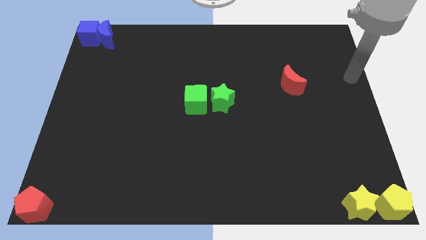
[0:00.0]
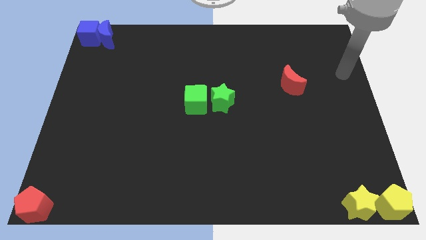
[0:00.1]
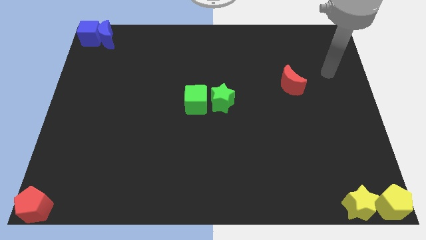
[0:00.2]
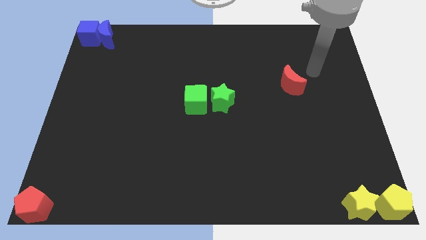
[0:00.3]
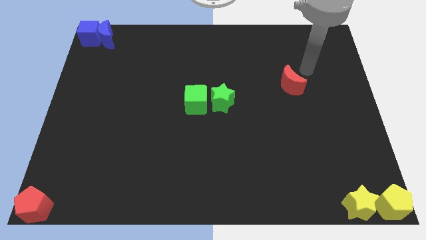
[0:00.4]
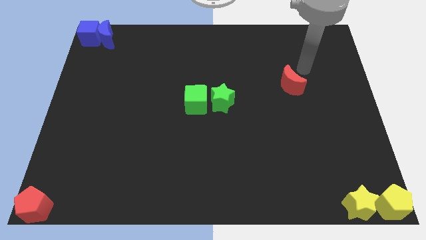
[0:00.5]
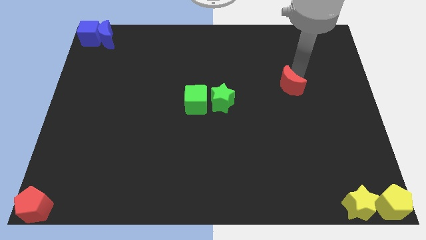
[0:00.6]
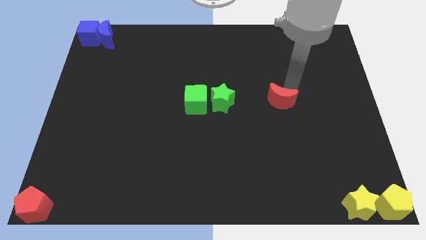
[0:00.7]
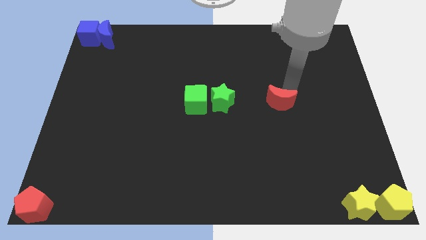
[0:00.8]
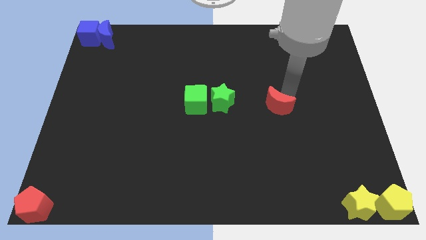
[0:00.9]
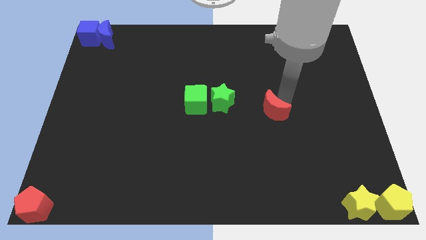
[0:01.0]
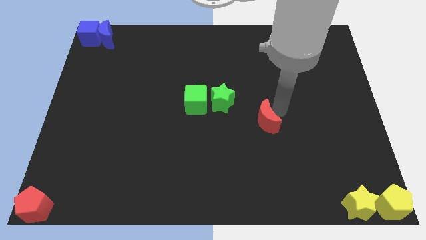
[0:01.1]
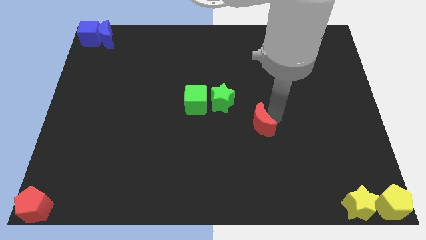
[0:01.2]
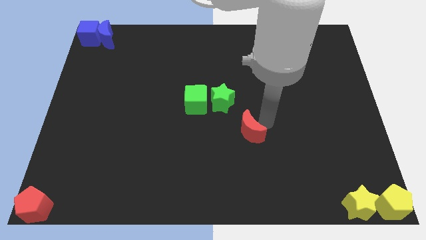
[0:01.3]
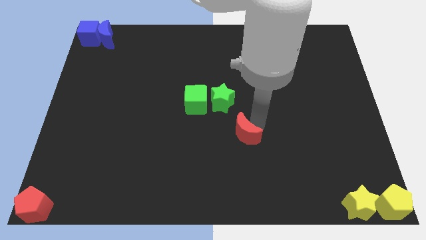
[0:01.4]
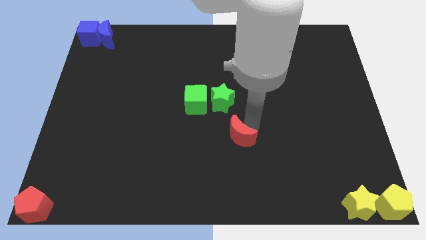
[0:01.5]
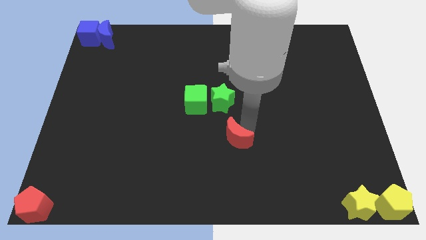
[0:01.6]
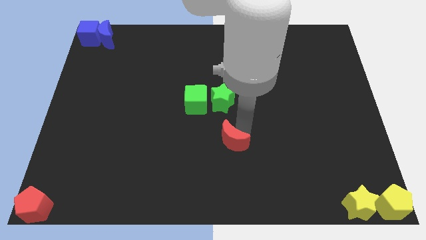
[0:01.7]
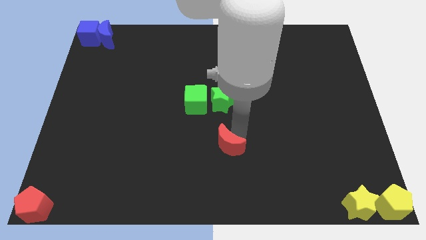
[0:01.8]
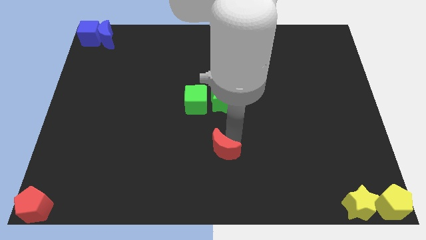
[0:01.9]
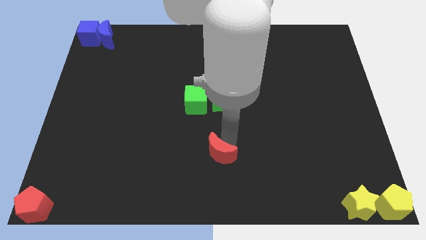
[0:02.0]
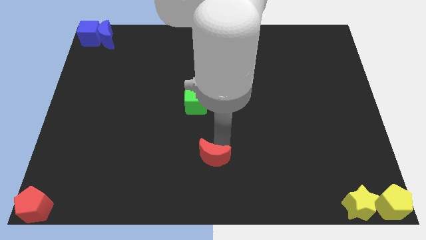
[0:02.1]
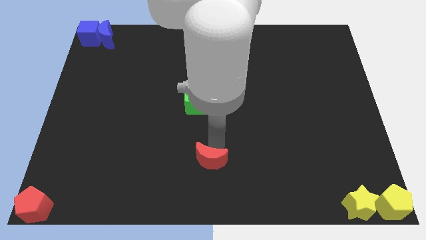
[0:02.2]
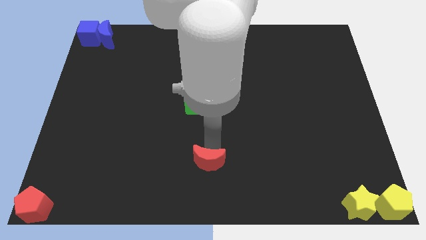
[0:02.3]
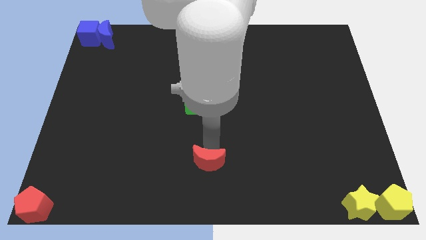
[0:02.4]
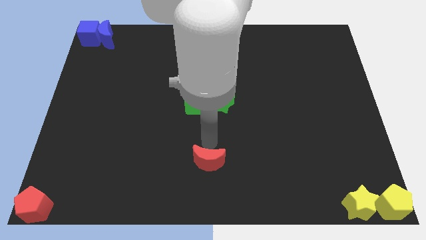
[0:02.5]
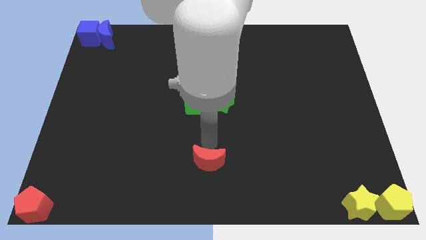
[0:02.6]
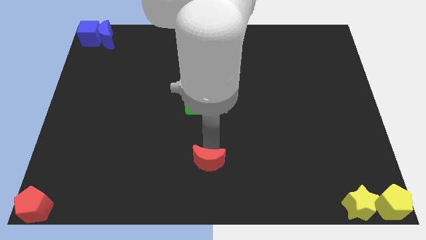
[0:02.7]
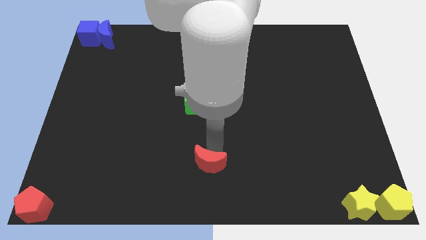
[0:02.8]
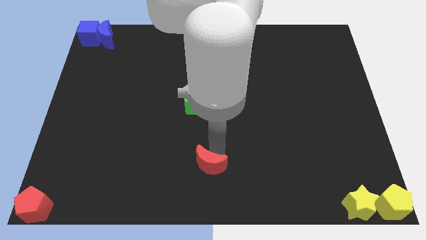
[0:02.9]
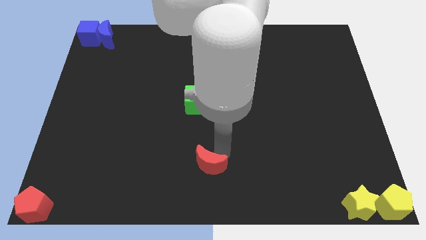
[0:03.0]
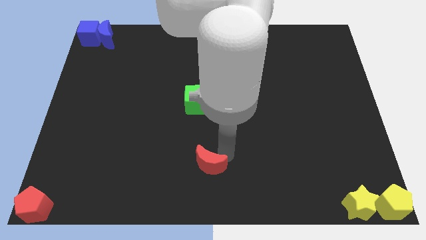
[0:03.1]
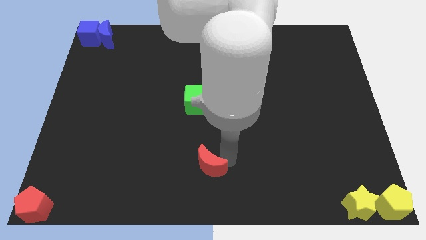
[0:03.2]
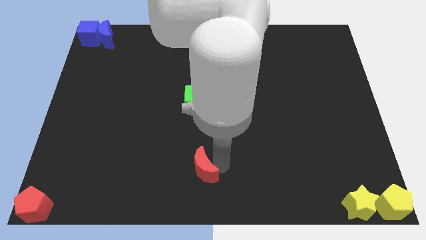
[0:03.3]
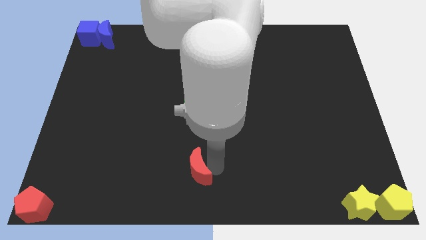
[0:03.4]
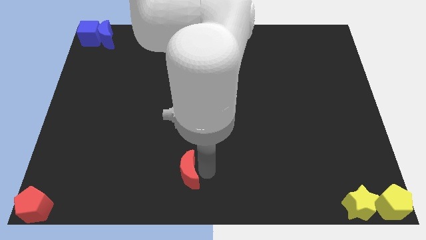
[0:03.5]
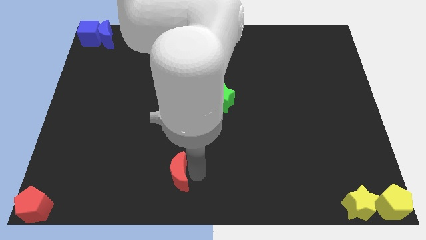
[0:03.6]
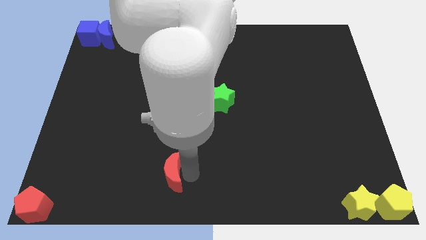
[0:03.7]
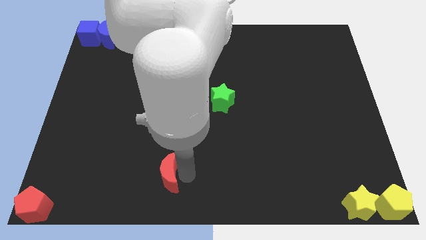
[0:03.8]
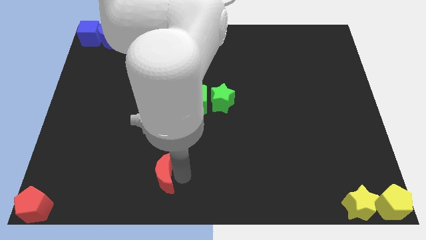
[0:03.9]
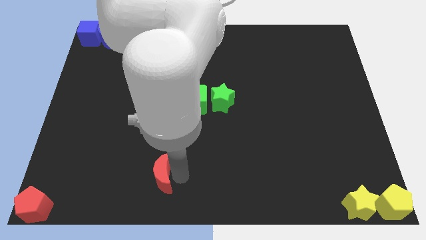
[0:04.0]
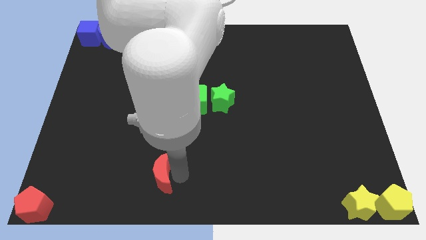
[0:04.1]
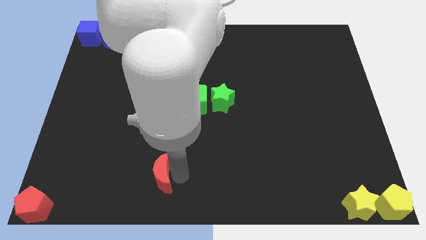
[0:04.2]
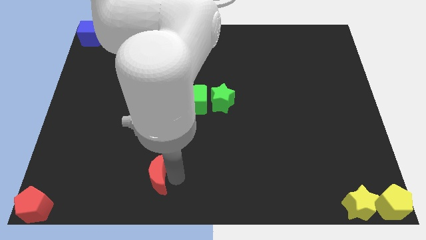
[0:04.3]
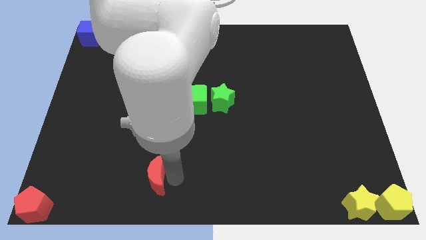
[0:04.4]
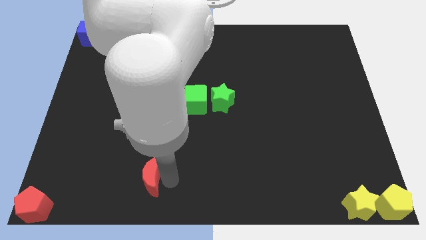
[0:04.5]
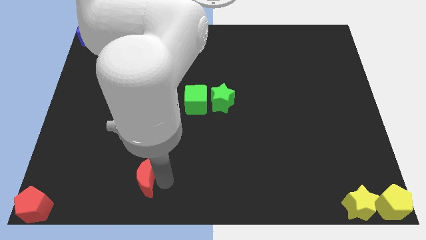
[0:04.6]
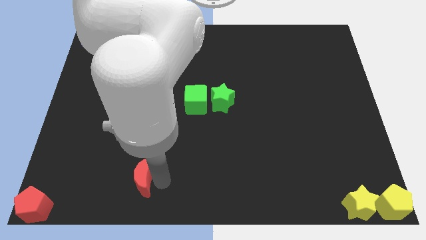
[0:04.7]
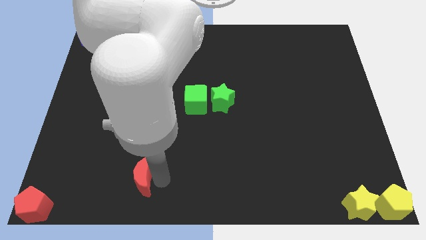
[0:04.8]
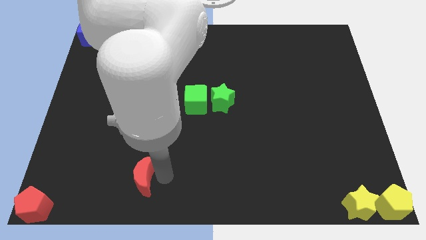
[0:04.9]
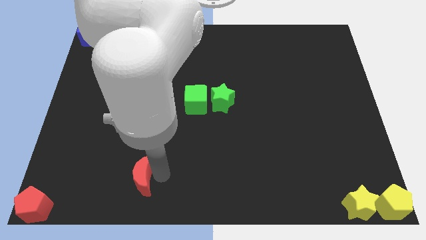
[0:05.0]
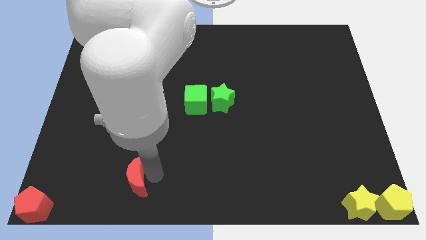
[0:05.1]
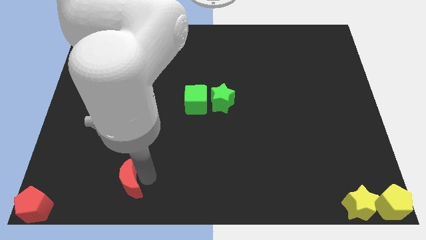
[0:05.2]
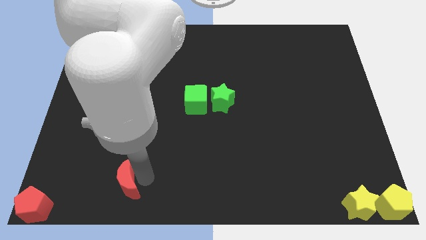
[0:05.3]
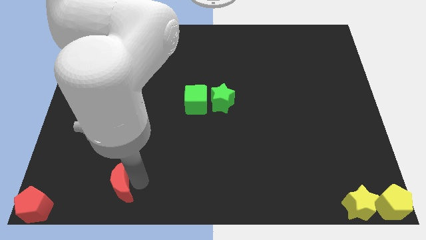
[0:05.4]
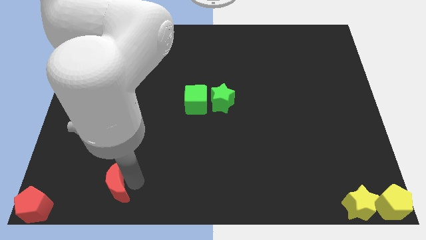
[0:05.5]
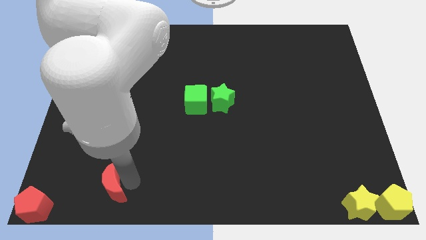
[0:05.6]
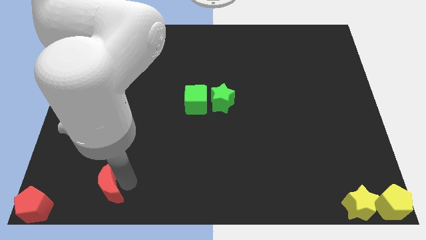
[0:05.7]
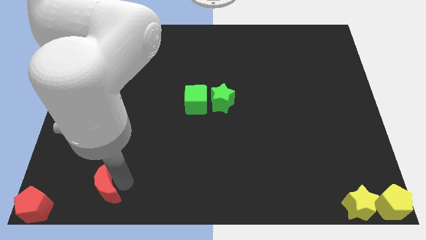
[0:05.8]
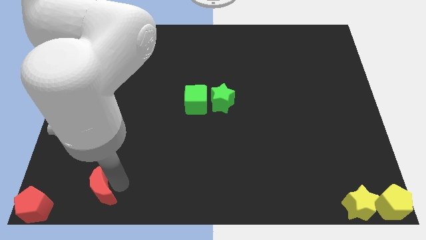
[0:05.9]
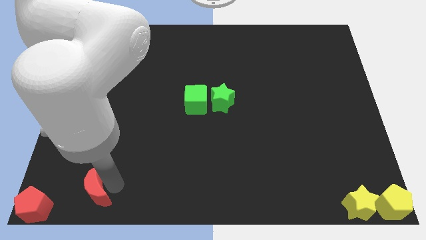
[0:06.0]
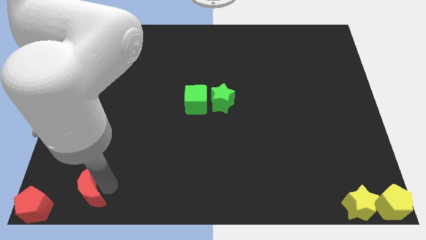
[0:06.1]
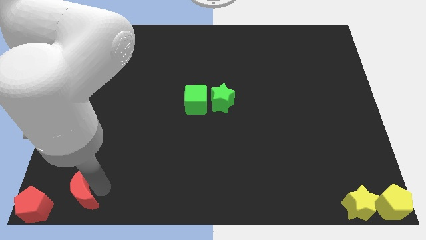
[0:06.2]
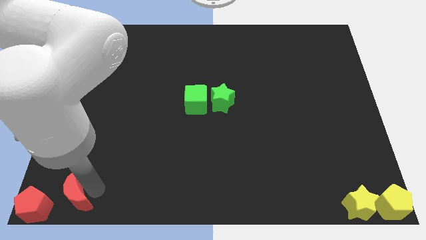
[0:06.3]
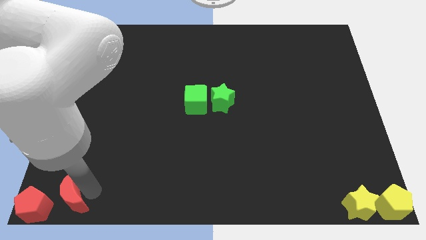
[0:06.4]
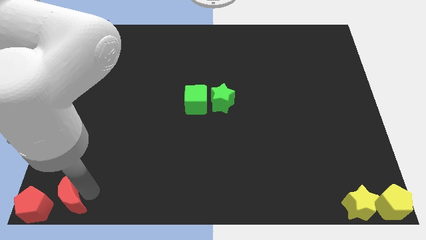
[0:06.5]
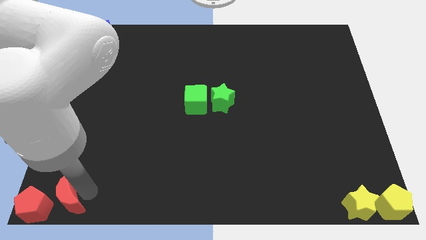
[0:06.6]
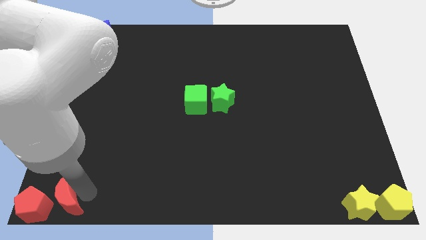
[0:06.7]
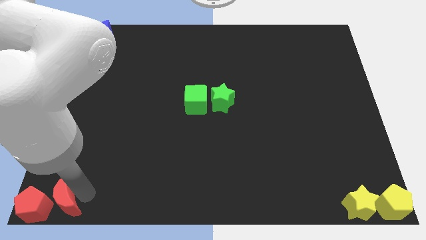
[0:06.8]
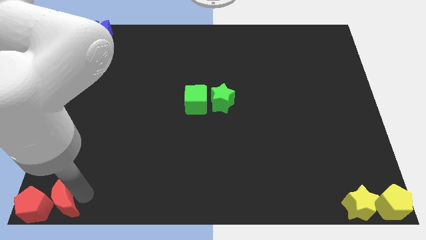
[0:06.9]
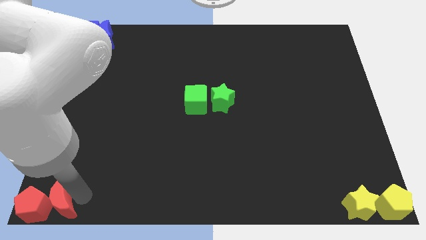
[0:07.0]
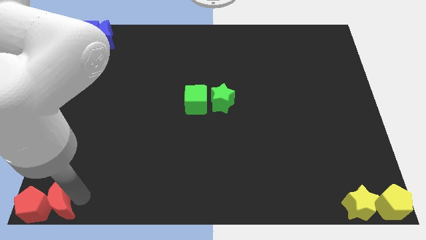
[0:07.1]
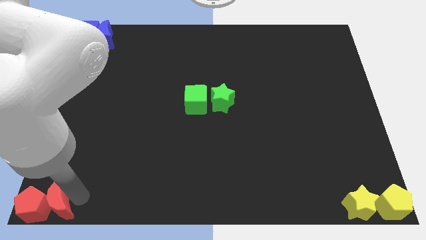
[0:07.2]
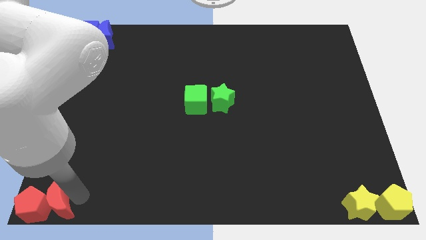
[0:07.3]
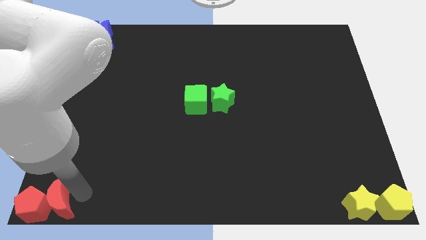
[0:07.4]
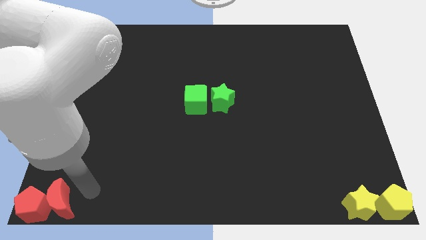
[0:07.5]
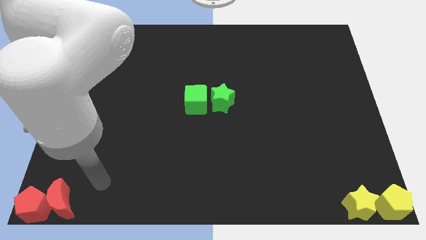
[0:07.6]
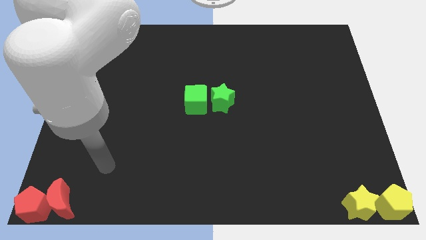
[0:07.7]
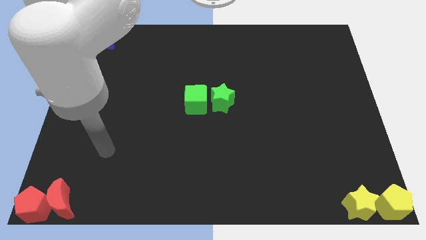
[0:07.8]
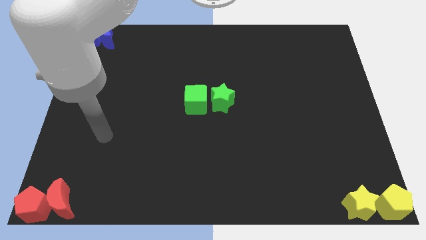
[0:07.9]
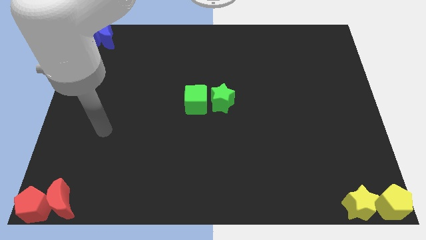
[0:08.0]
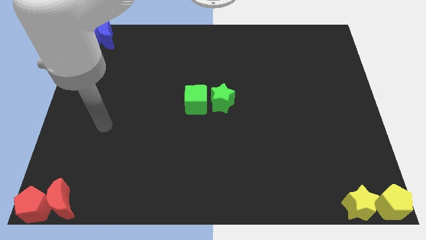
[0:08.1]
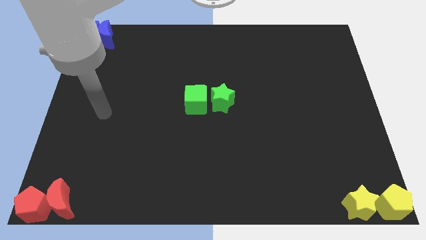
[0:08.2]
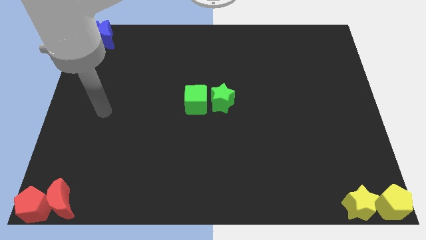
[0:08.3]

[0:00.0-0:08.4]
push the red crescent close to the red pentagon

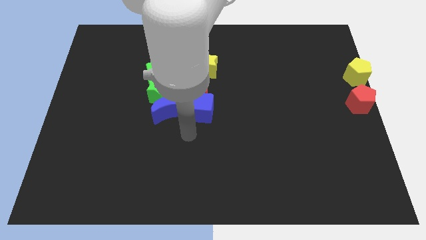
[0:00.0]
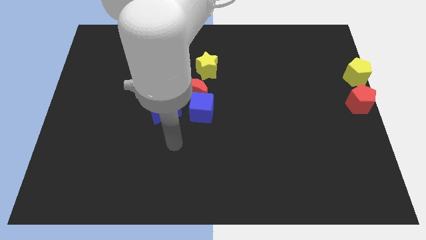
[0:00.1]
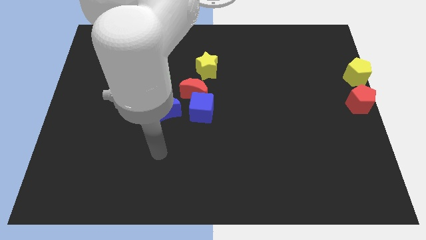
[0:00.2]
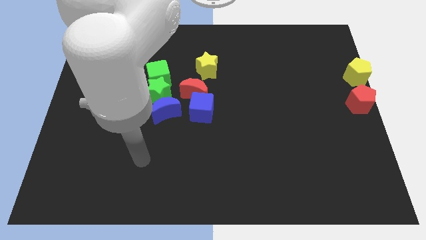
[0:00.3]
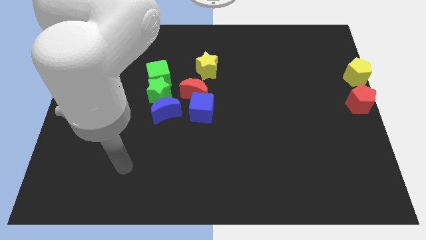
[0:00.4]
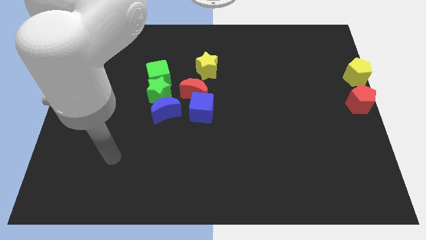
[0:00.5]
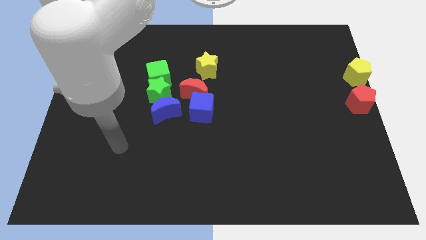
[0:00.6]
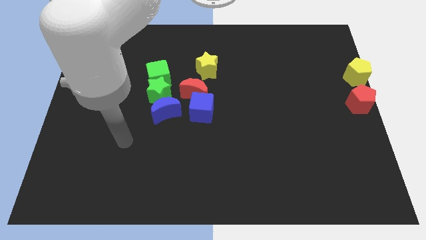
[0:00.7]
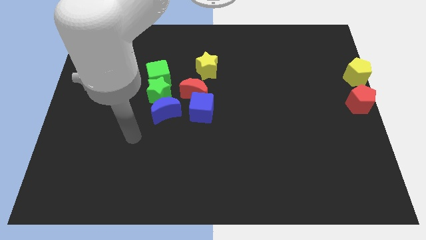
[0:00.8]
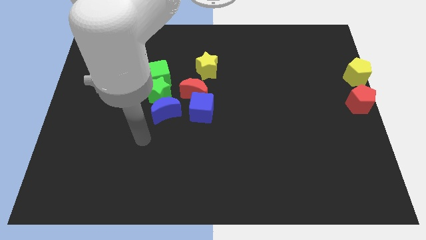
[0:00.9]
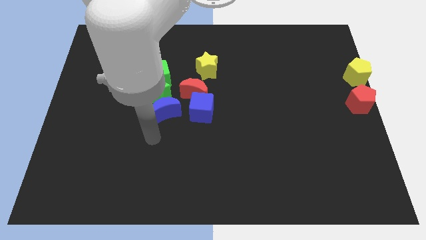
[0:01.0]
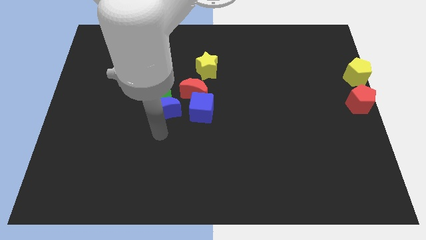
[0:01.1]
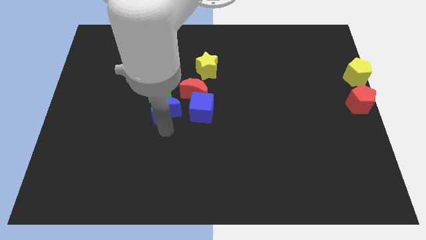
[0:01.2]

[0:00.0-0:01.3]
point your hand below the vertical line of blocks
